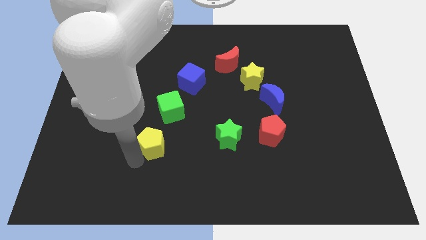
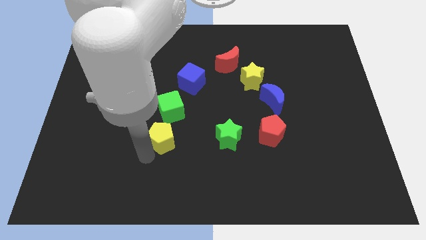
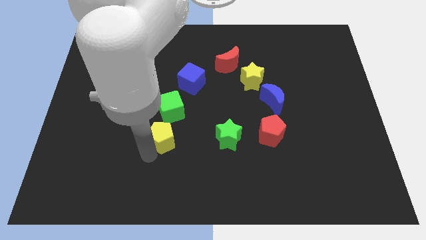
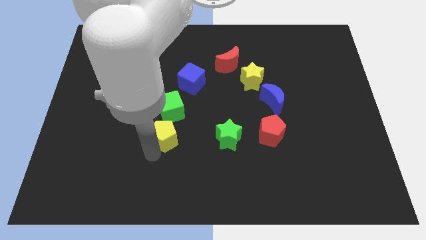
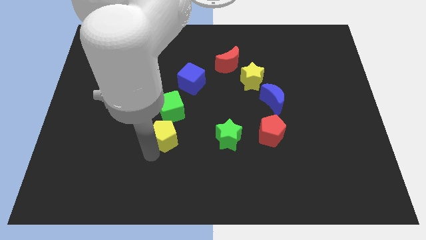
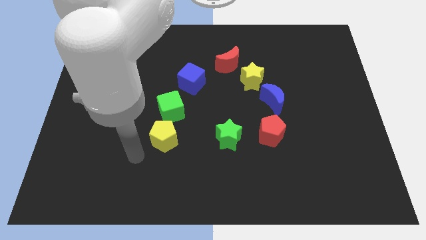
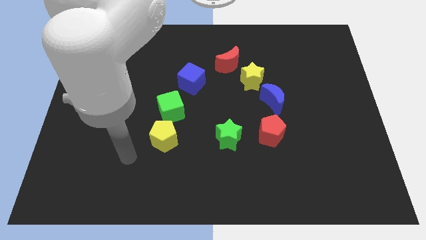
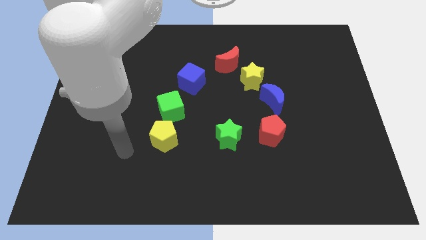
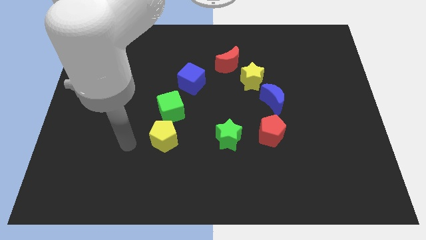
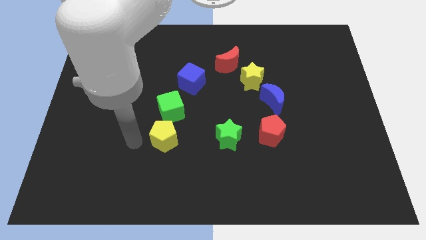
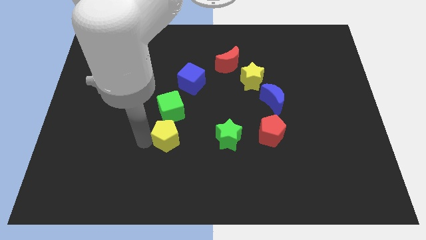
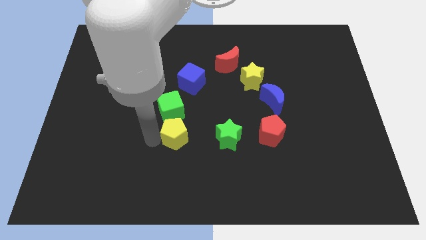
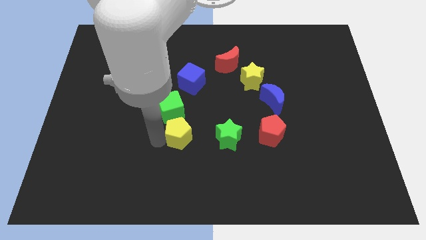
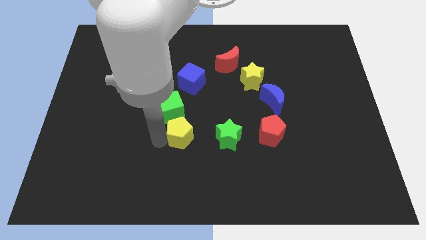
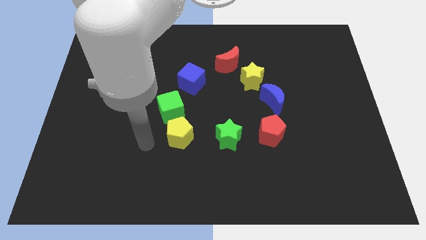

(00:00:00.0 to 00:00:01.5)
place the yellow pentagon under the green cube

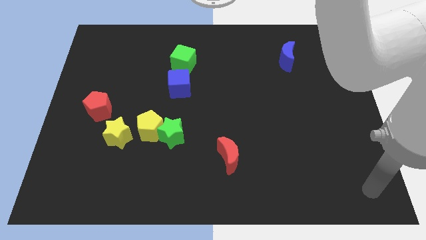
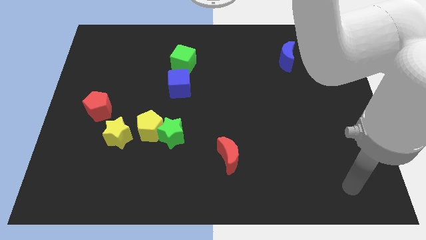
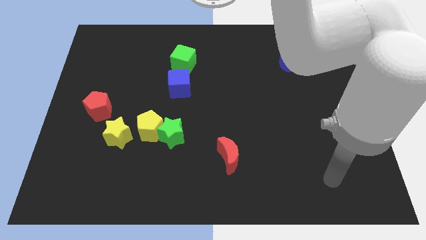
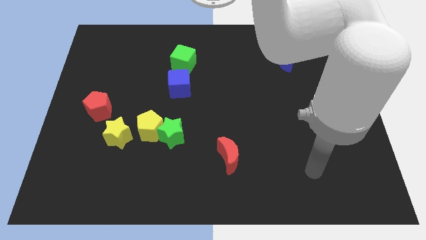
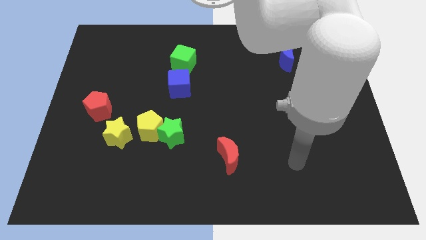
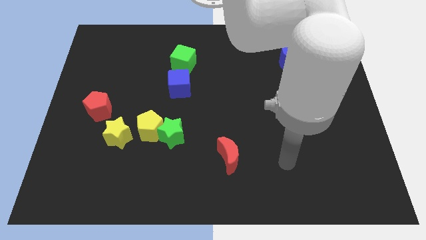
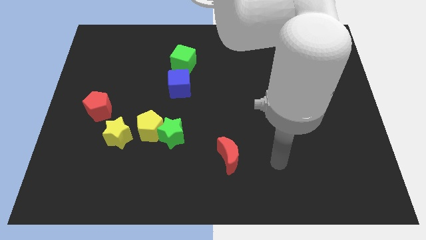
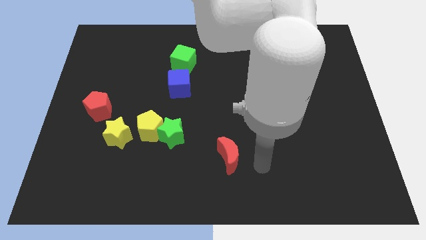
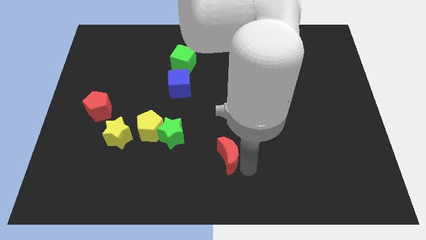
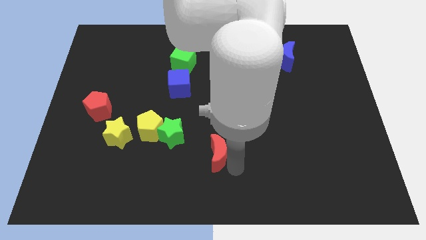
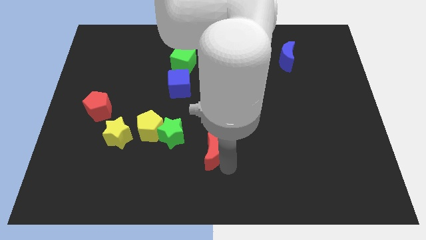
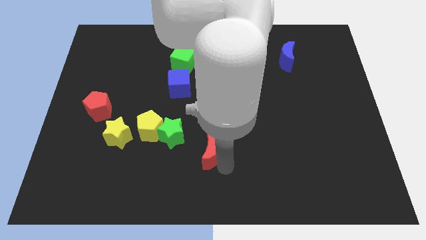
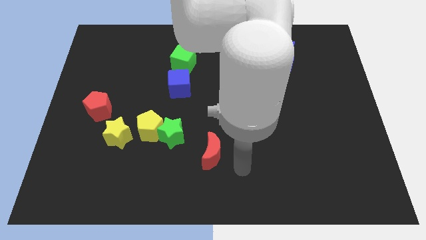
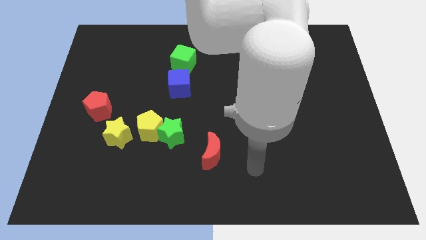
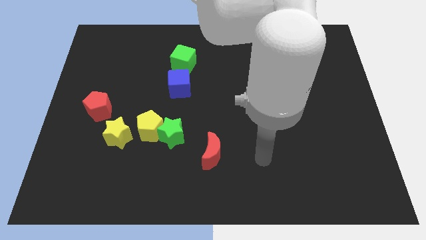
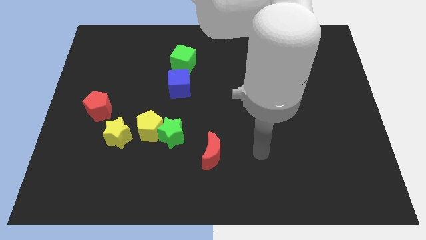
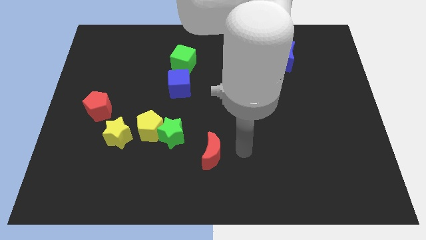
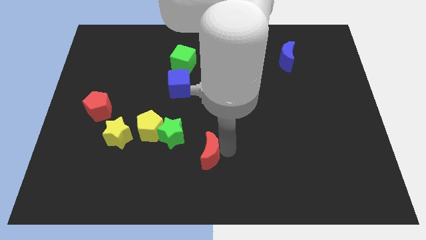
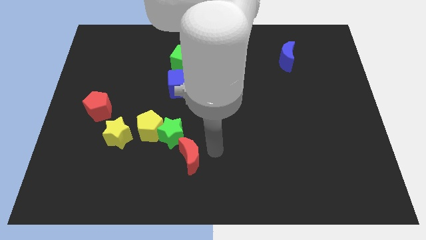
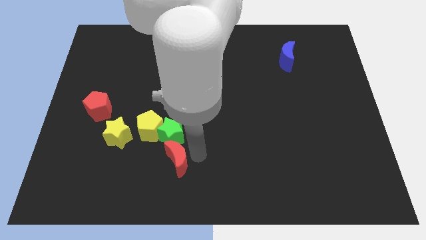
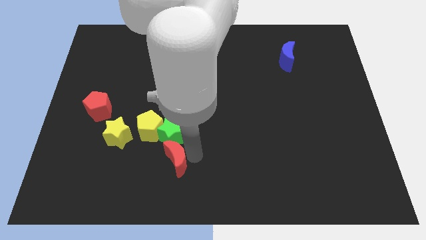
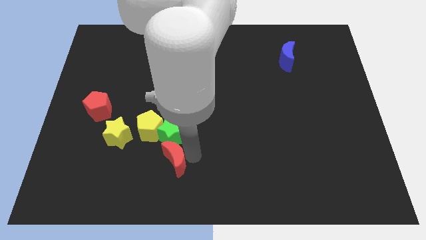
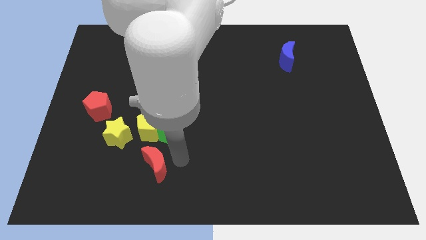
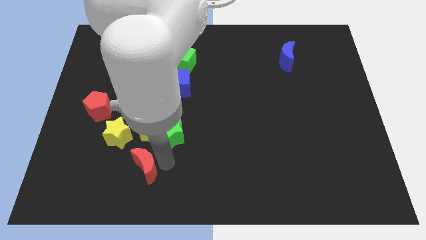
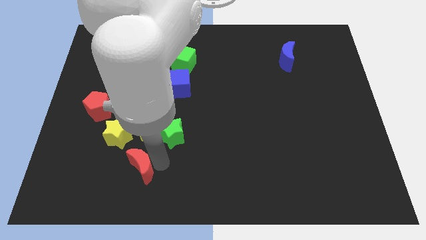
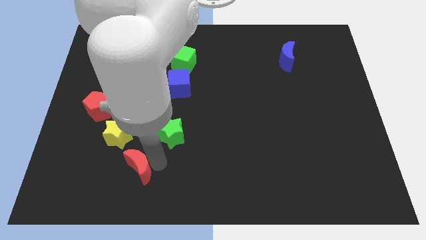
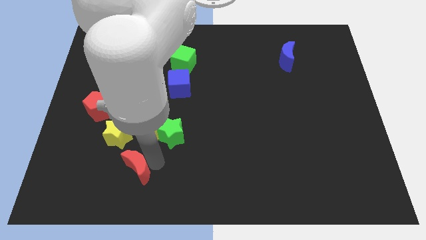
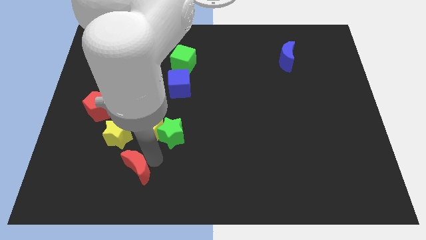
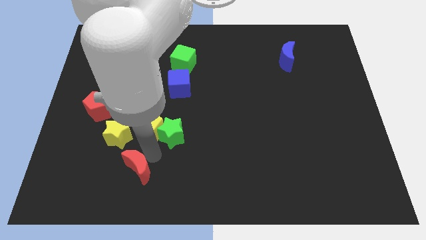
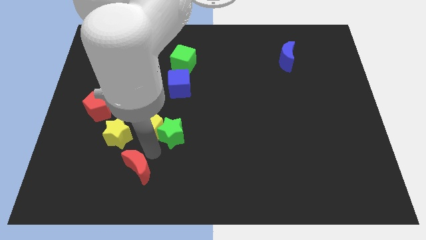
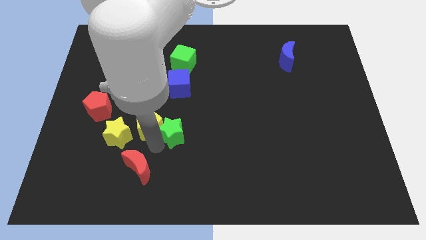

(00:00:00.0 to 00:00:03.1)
move the red moon to the bottom side of the group of blocks

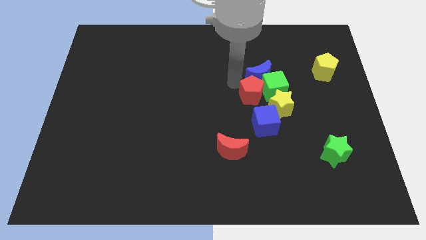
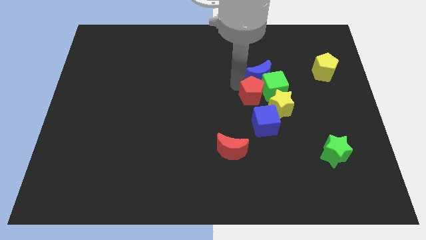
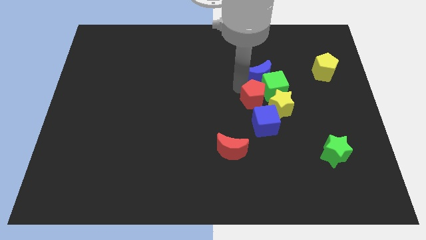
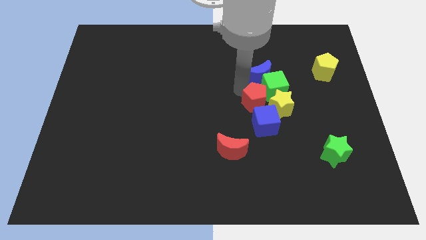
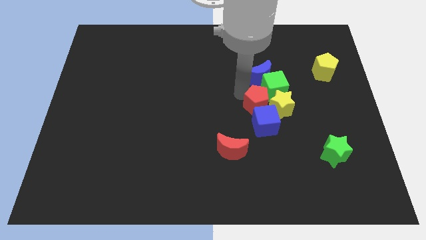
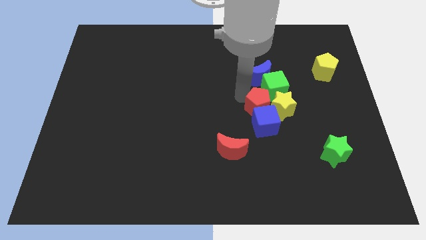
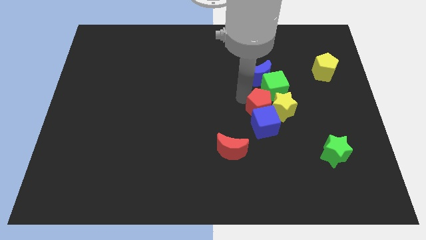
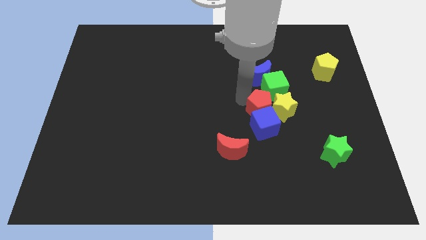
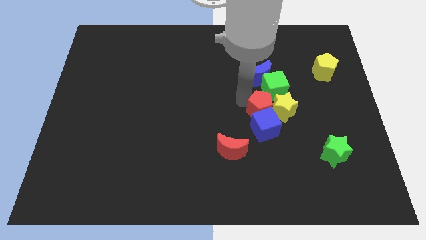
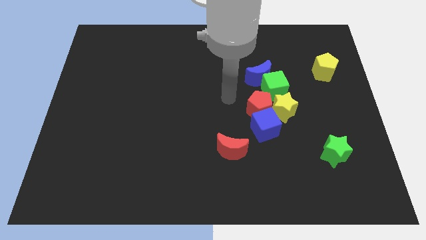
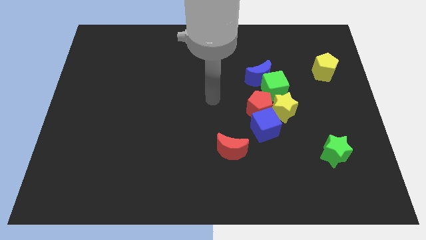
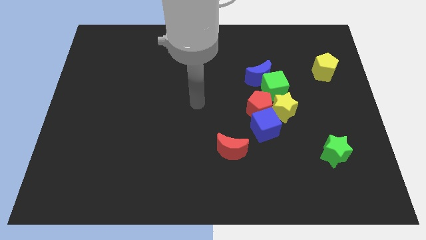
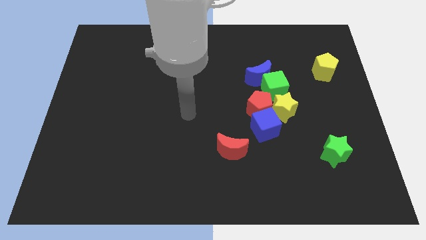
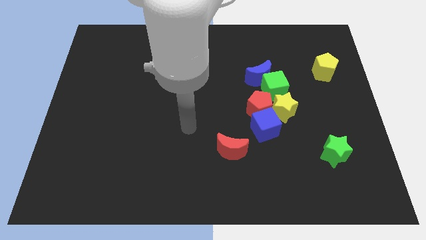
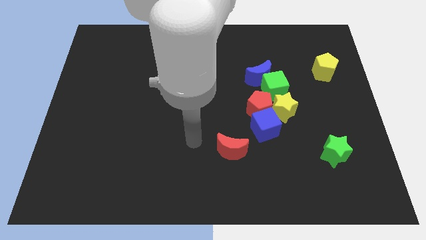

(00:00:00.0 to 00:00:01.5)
push the red pentagon into the blue cube

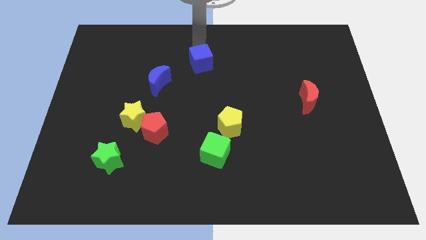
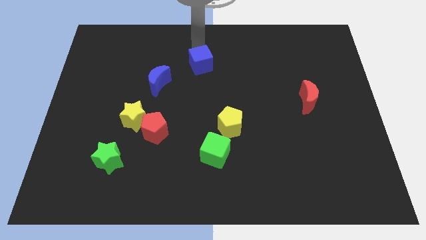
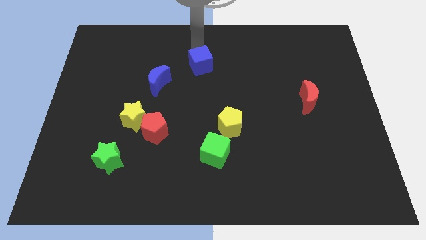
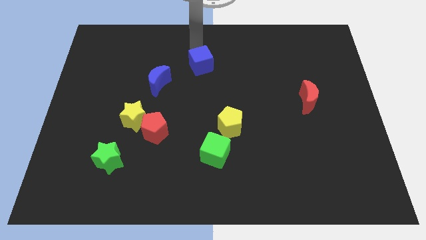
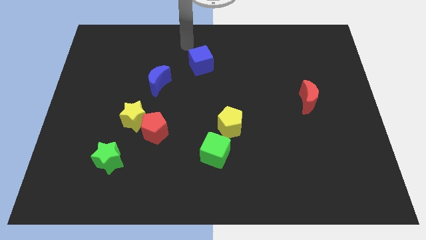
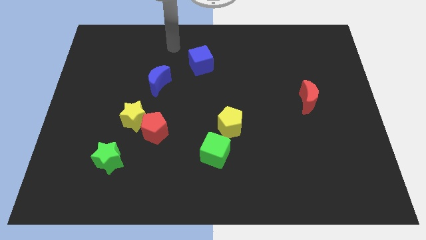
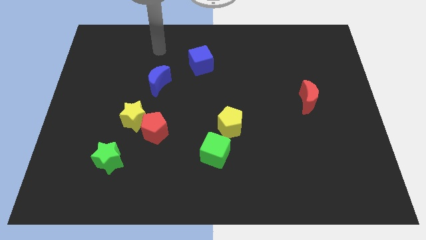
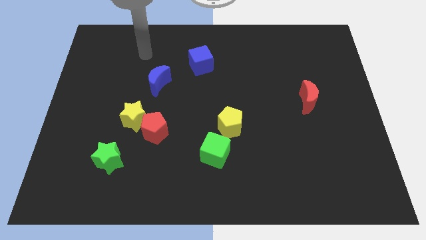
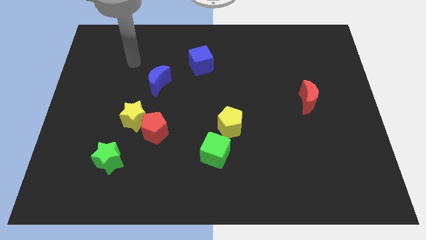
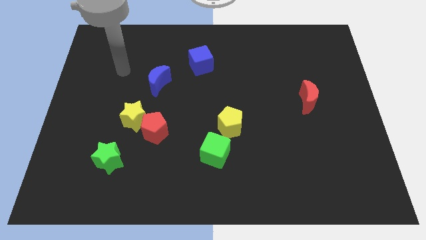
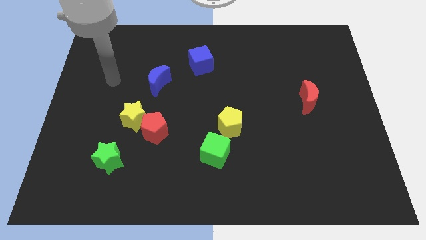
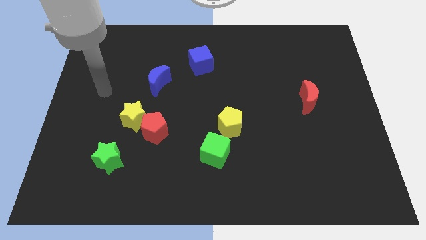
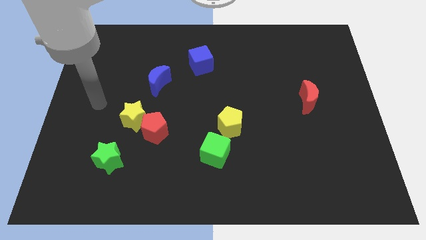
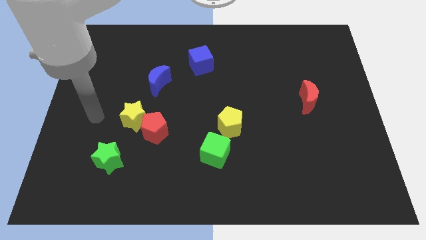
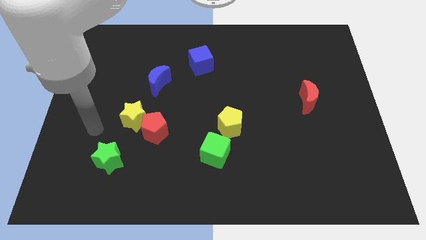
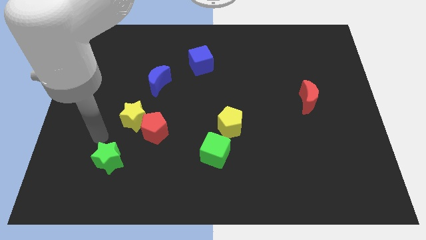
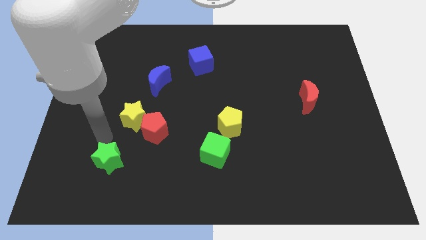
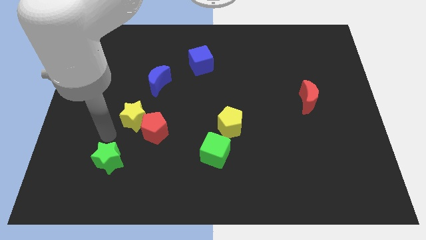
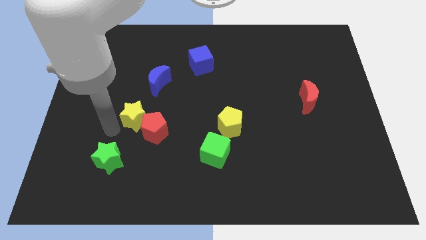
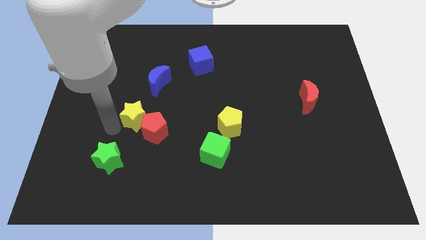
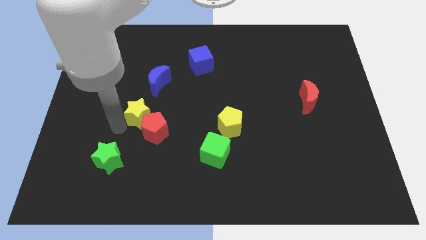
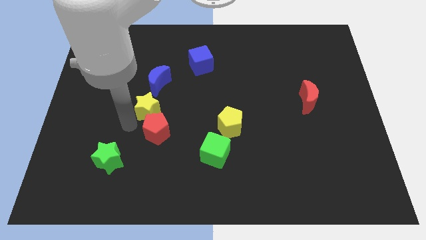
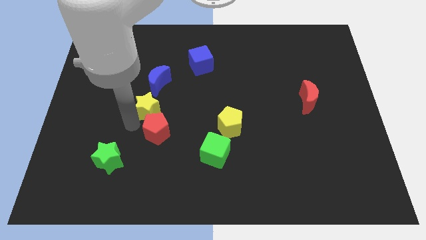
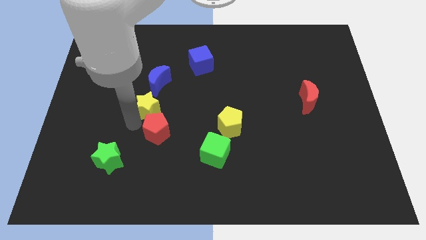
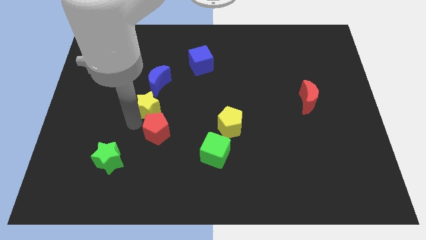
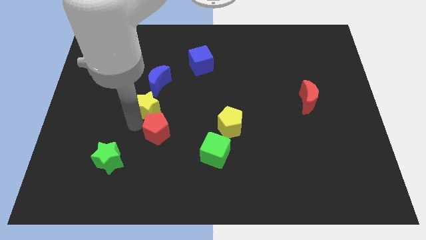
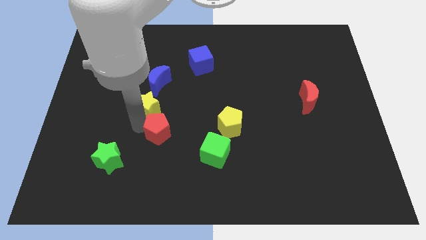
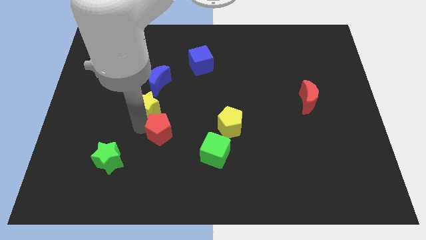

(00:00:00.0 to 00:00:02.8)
move the yellow star down to the blue moon

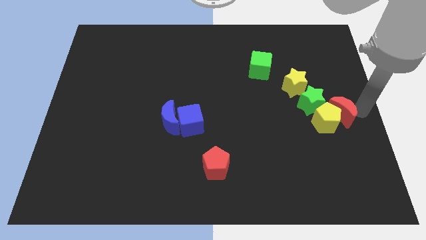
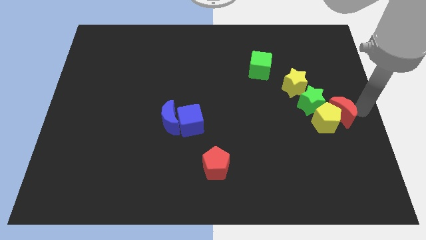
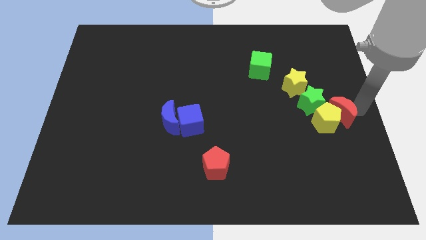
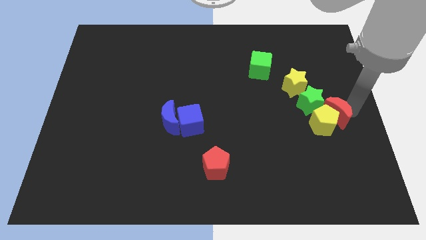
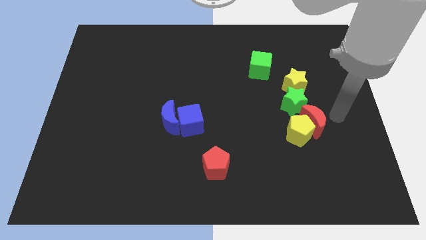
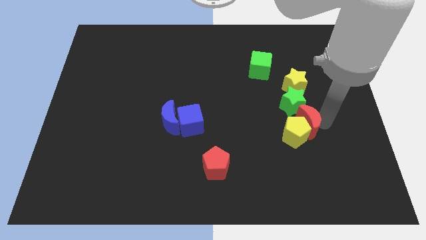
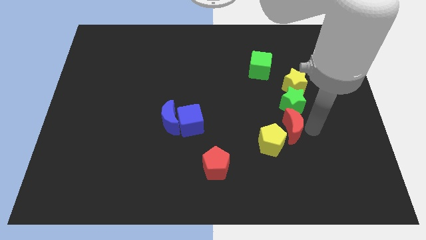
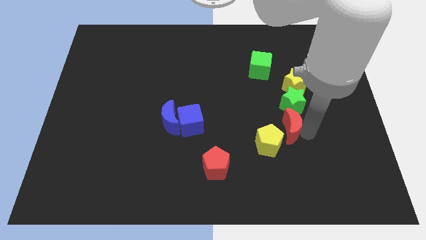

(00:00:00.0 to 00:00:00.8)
move the red crescent to the left of the board
